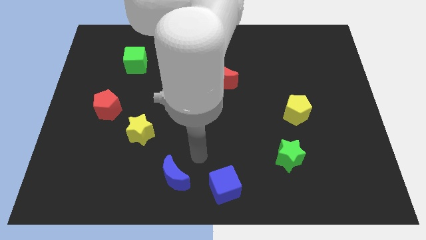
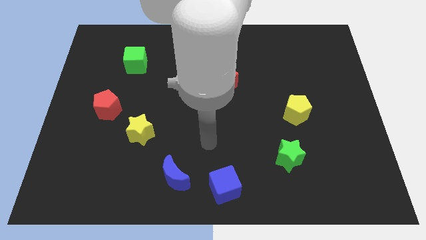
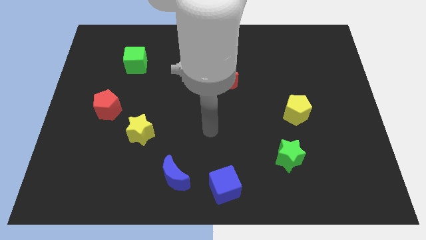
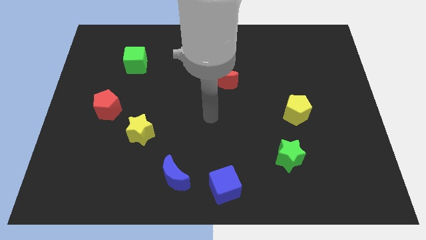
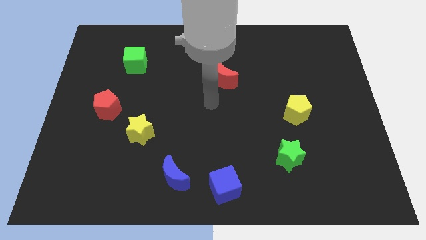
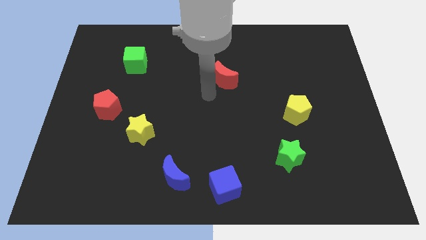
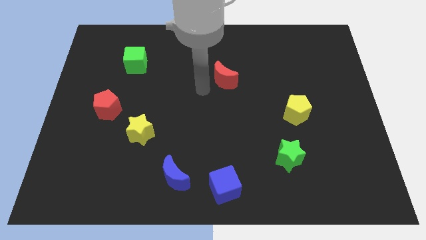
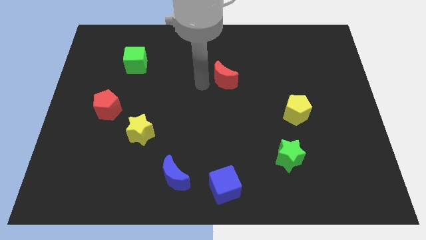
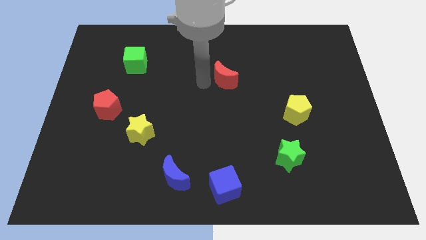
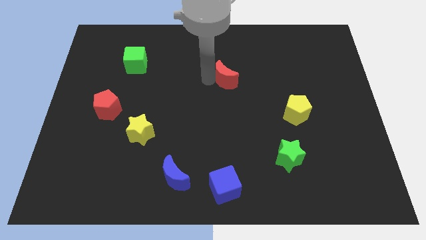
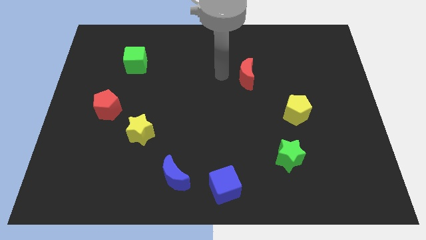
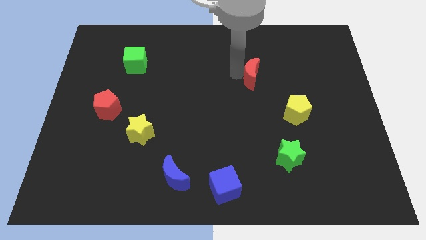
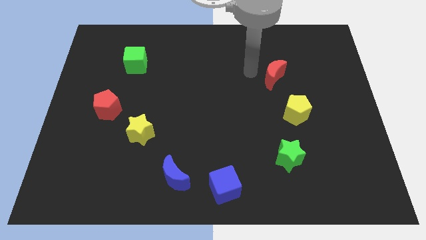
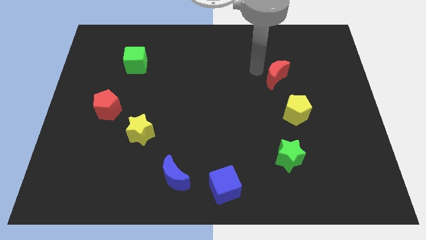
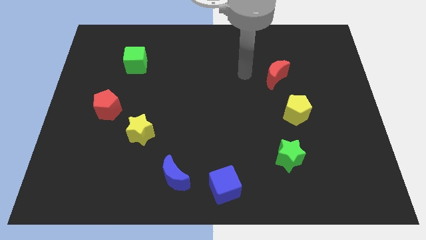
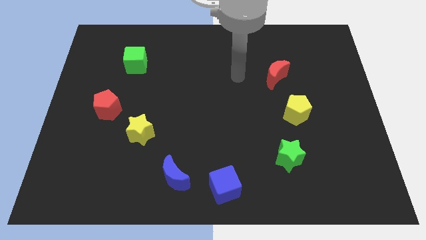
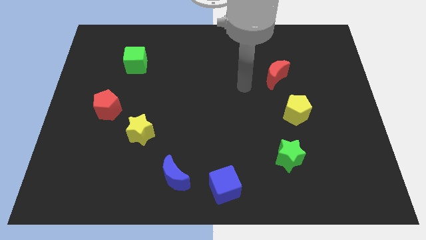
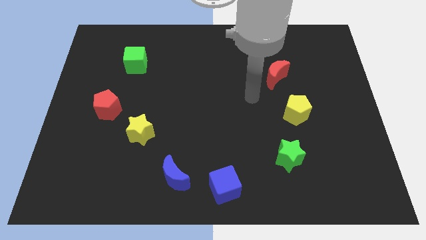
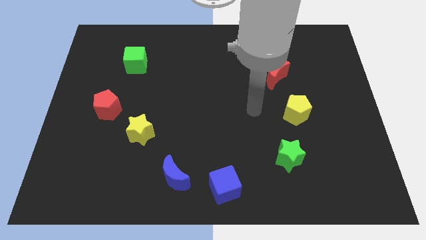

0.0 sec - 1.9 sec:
push the red crescent towards the top of yellow pentagon

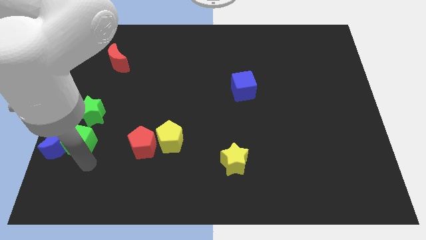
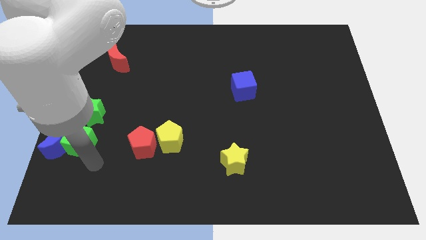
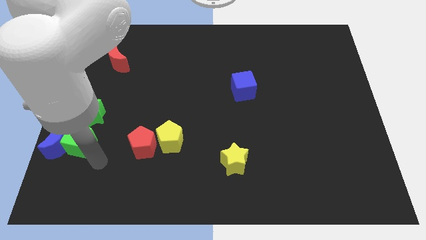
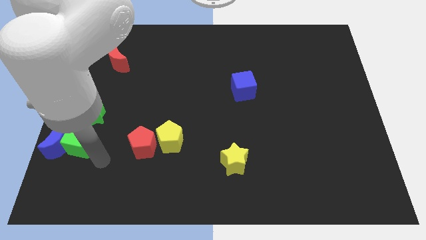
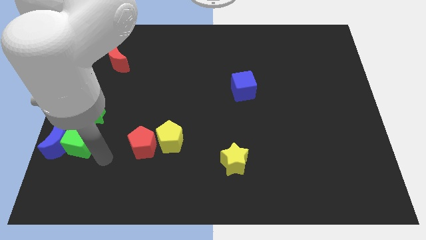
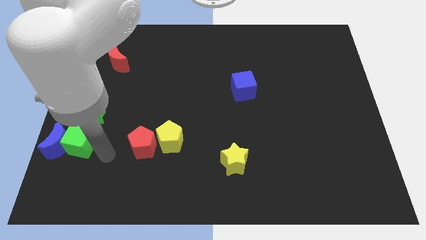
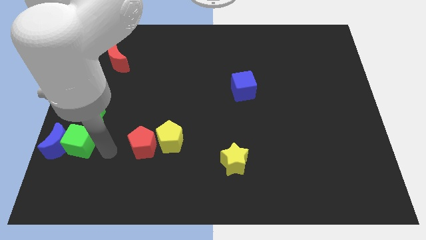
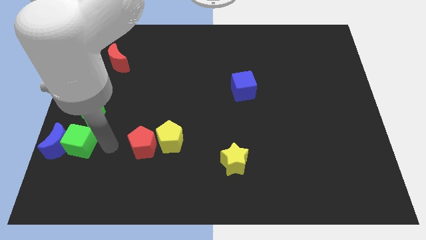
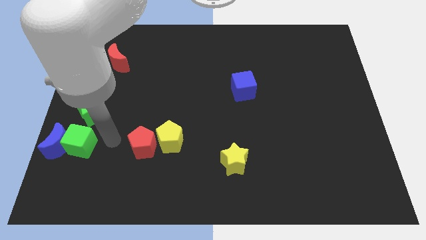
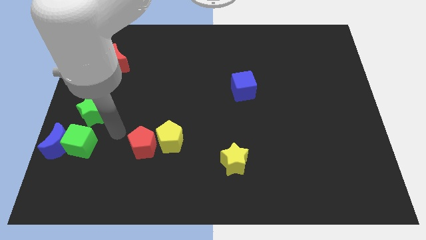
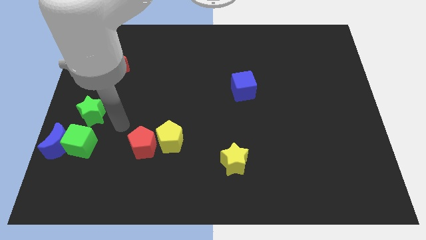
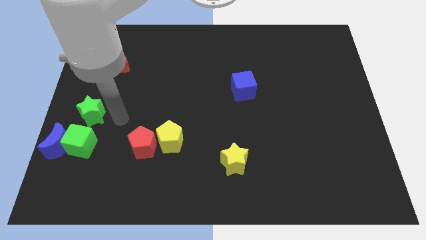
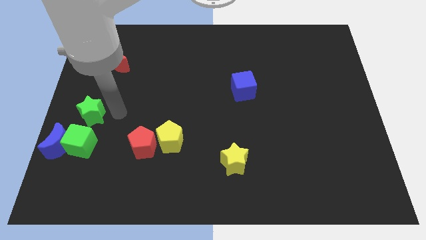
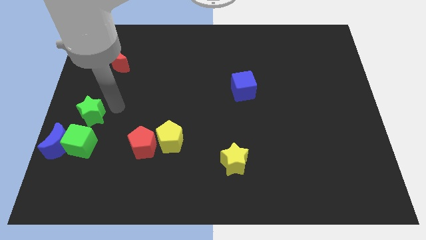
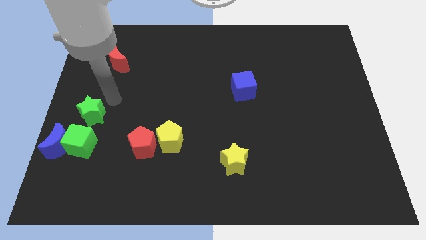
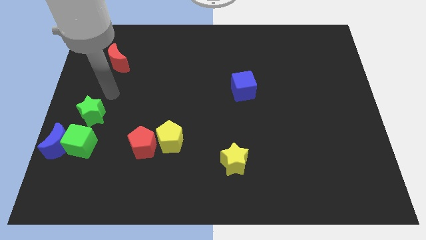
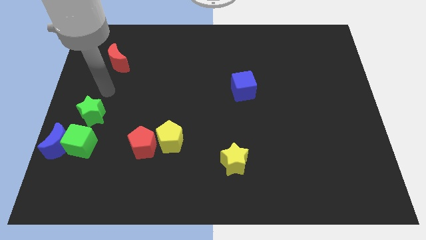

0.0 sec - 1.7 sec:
move your arm to the top of the green star

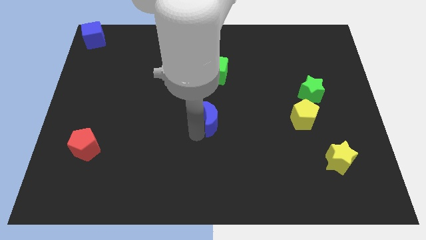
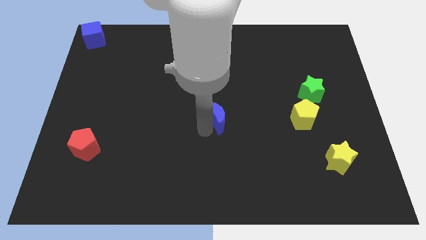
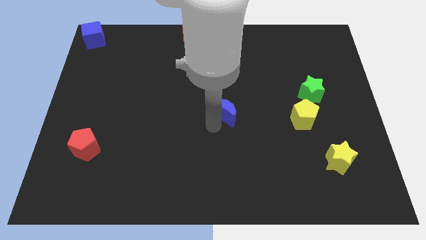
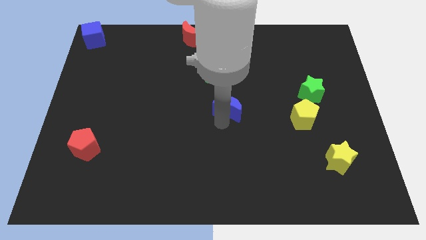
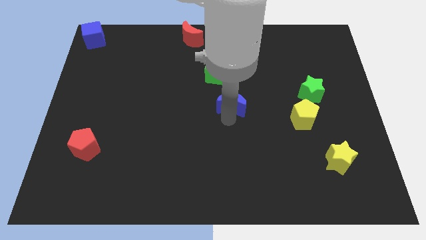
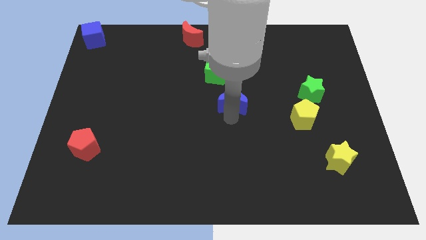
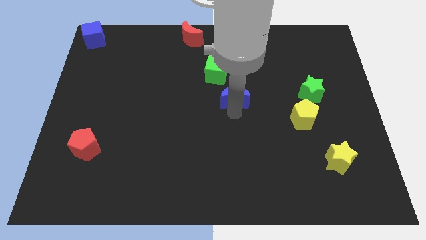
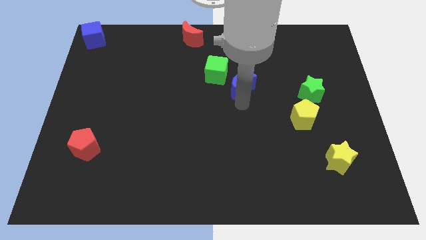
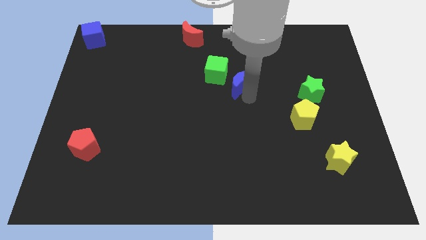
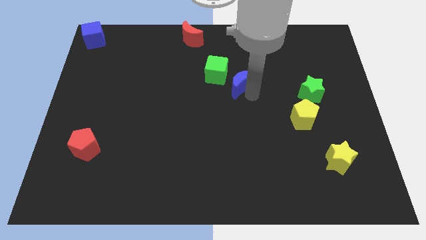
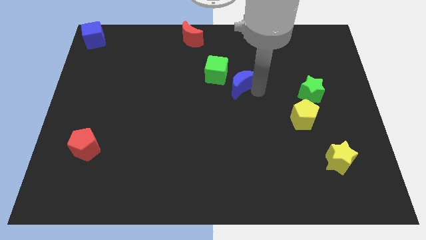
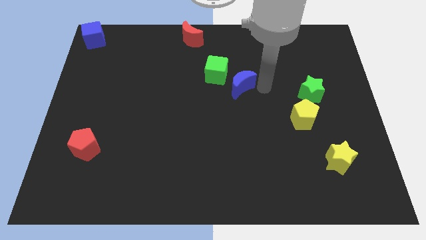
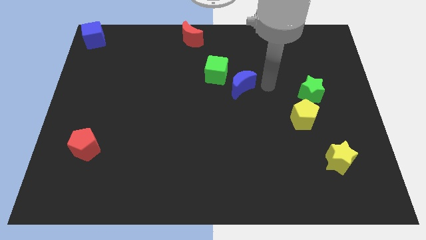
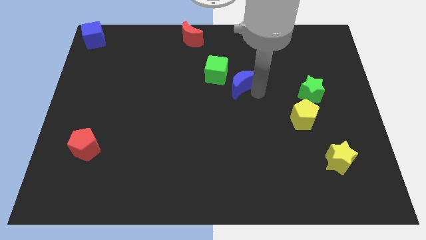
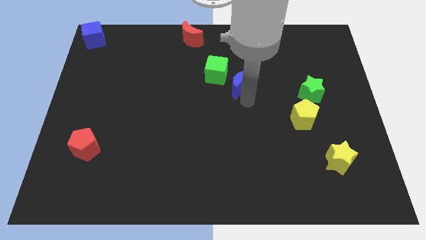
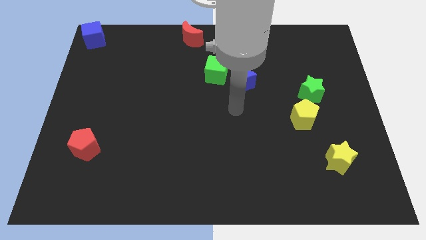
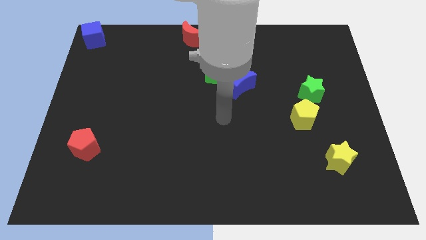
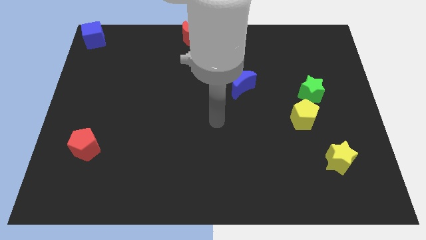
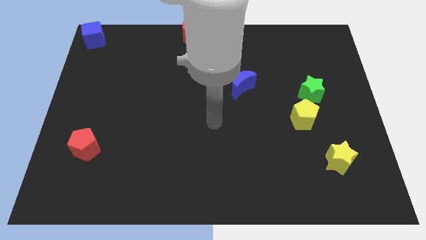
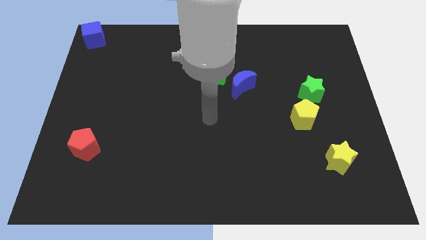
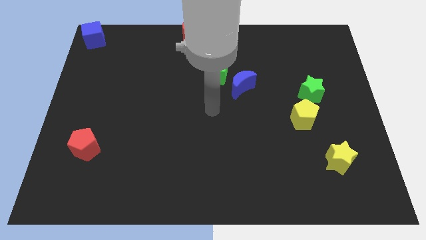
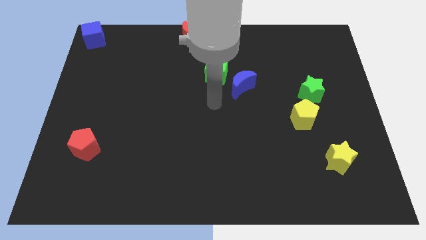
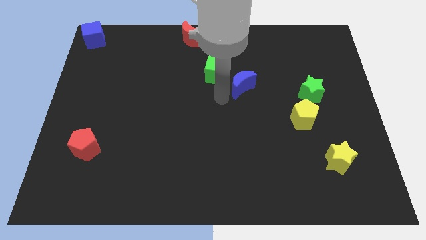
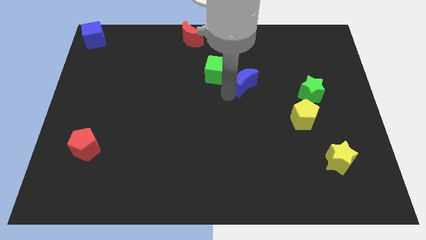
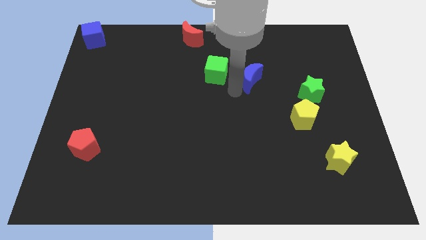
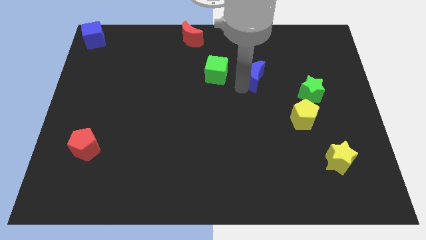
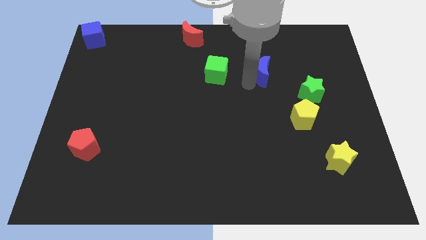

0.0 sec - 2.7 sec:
place the blue moon to the right of the green cube

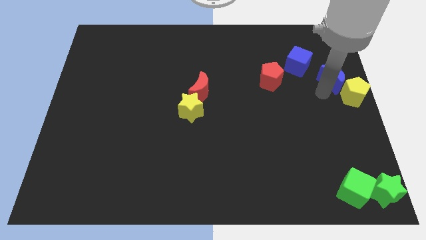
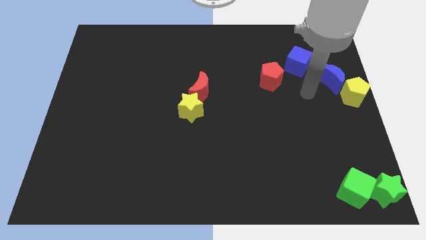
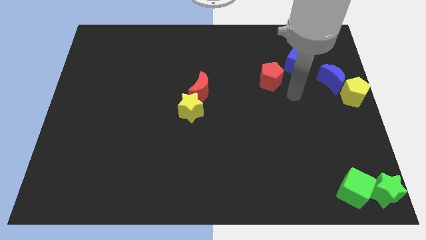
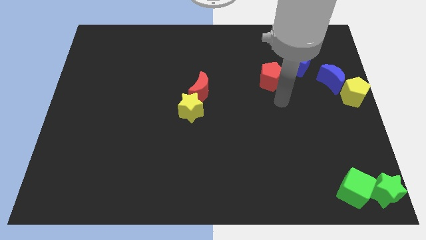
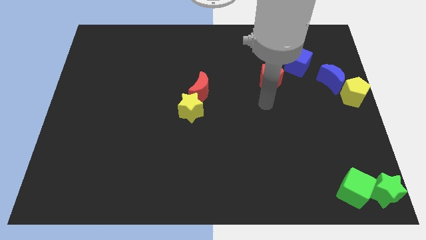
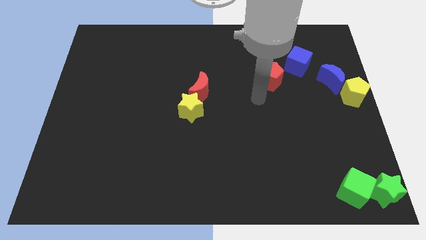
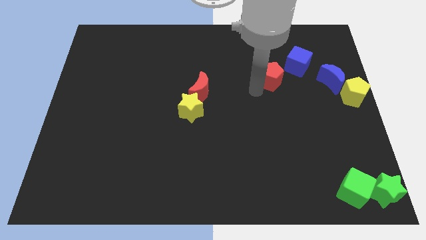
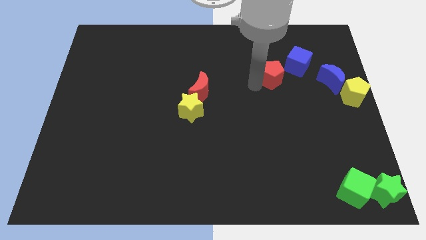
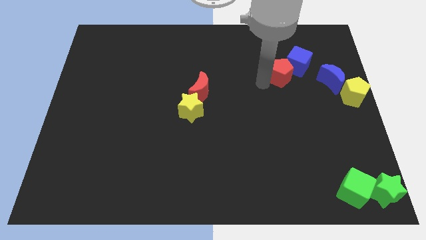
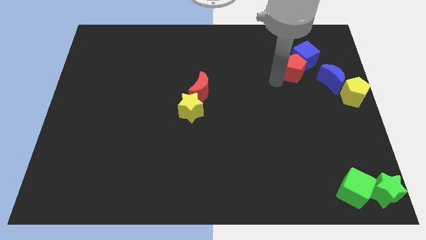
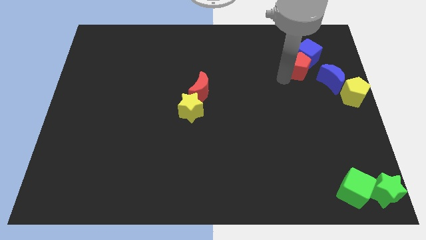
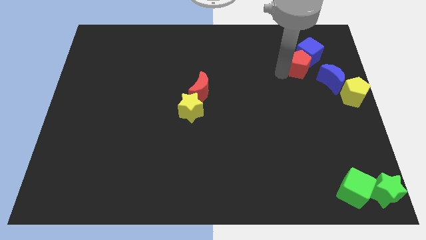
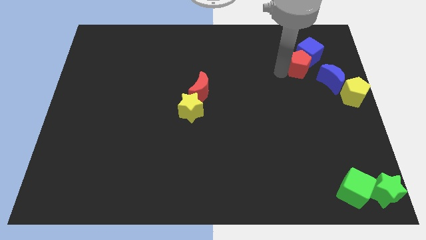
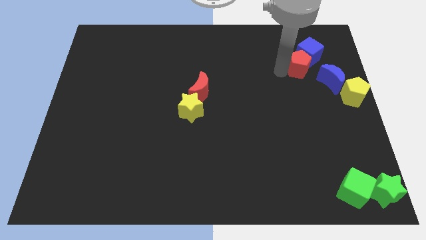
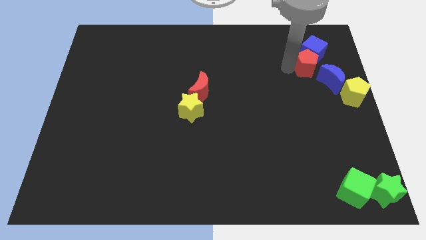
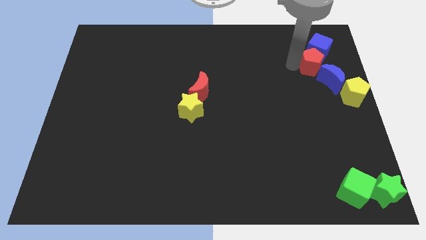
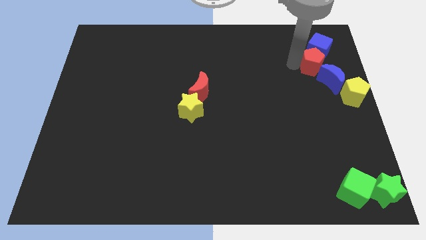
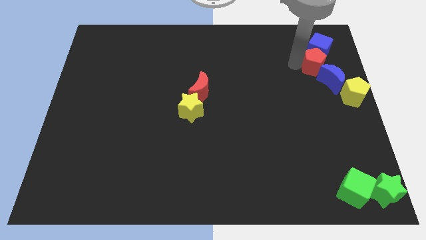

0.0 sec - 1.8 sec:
push the blue cube with the red pentagon towards the top right of the board

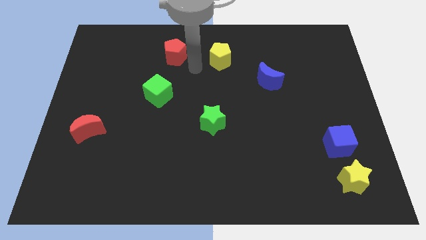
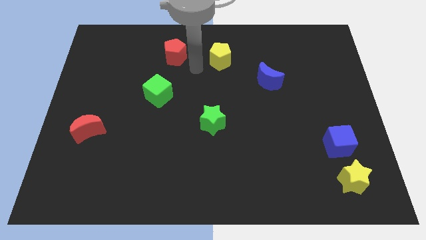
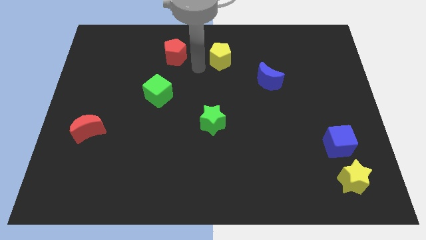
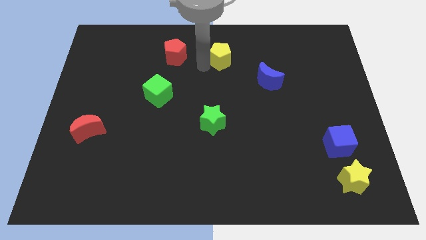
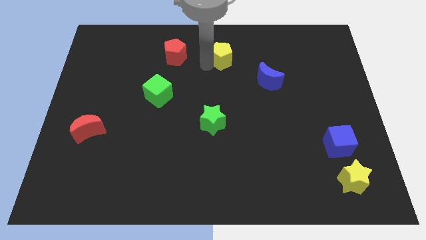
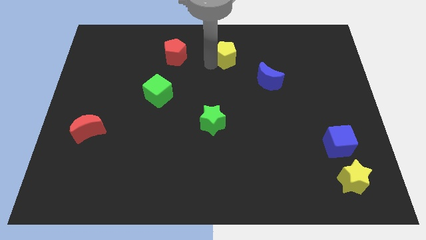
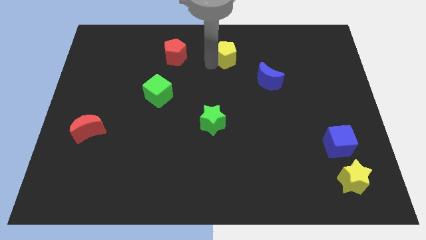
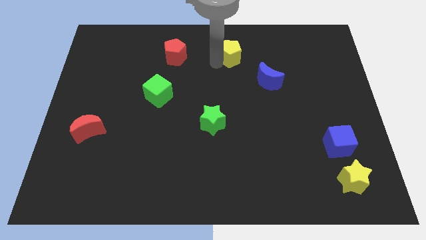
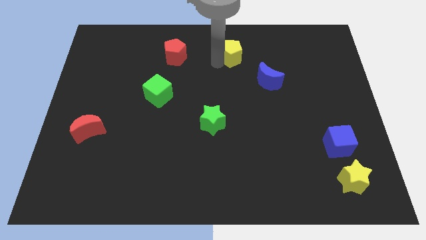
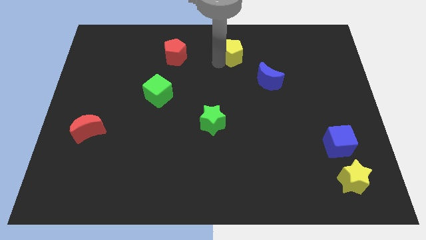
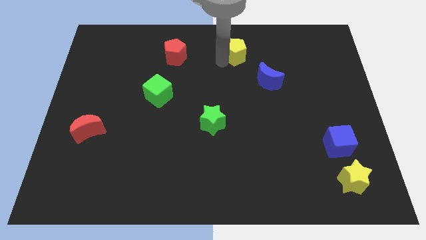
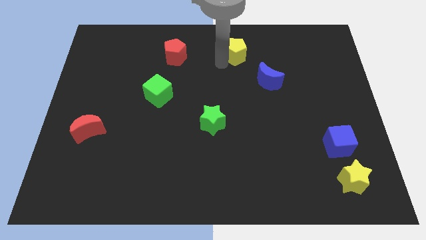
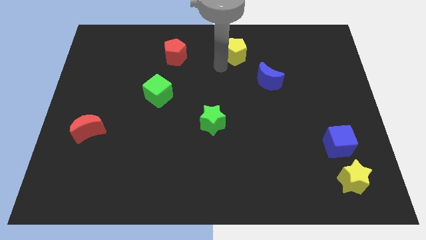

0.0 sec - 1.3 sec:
push the yellow pentagon to the top left of the blue crescent
